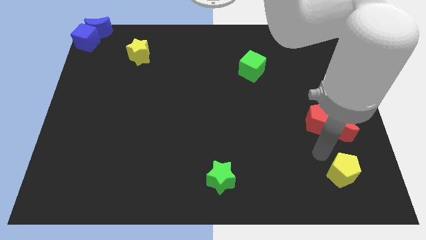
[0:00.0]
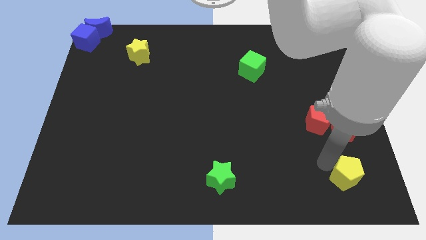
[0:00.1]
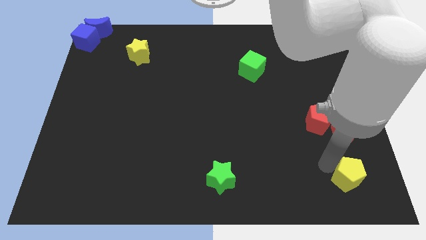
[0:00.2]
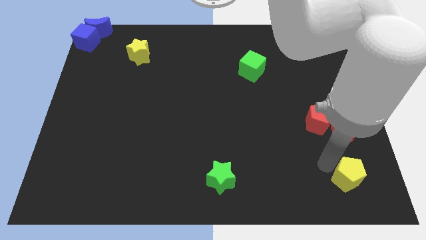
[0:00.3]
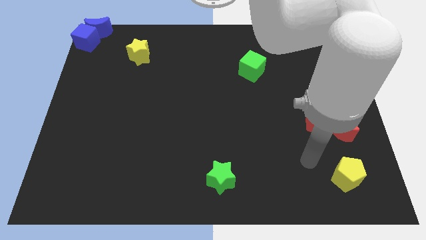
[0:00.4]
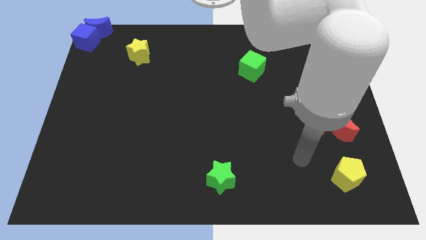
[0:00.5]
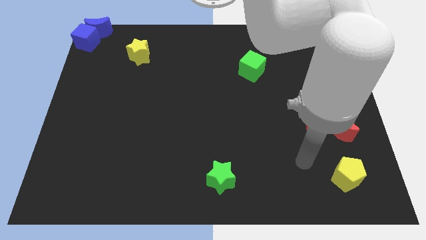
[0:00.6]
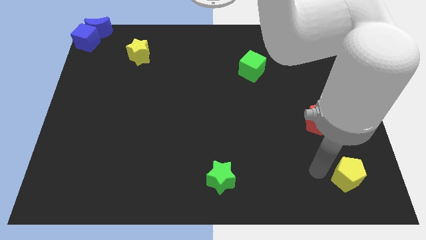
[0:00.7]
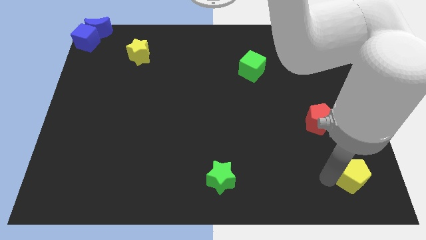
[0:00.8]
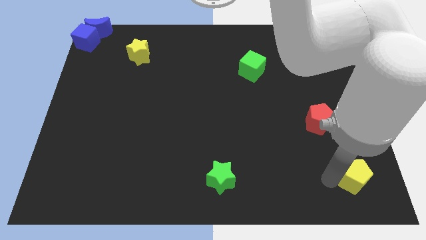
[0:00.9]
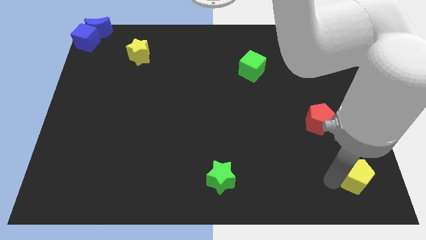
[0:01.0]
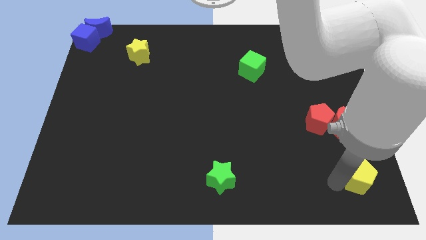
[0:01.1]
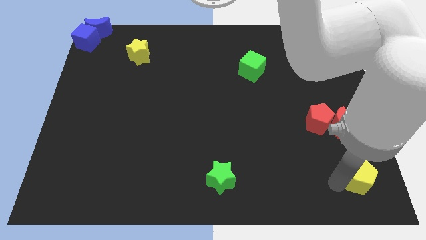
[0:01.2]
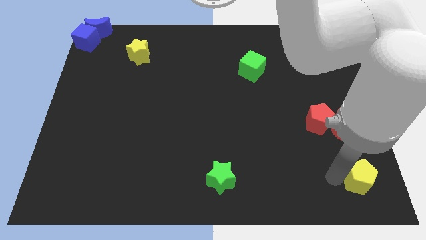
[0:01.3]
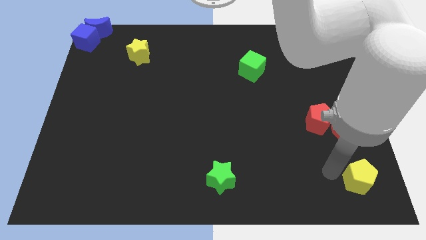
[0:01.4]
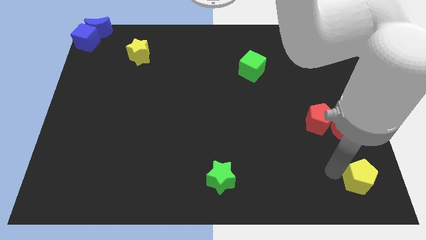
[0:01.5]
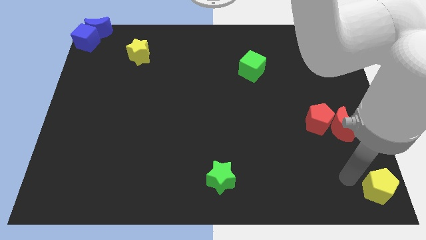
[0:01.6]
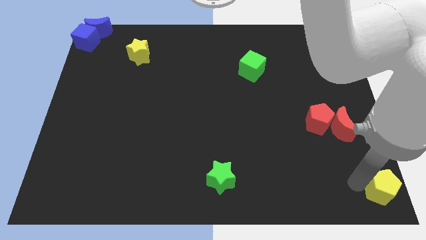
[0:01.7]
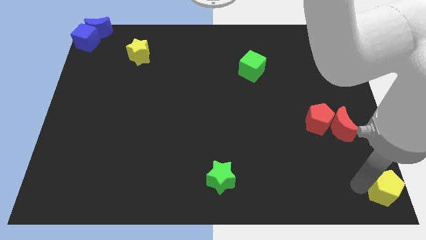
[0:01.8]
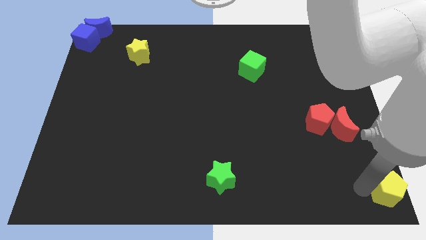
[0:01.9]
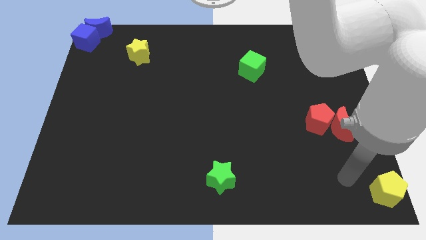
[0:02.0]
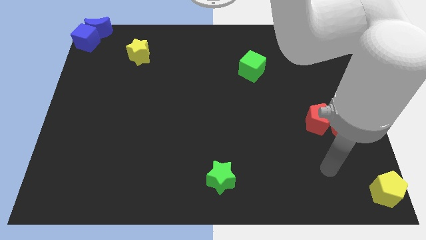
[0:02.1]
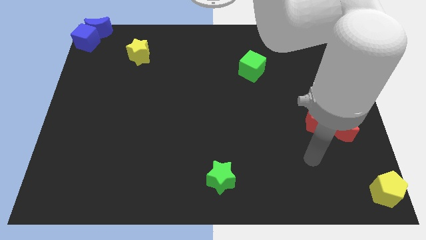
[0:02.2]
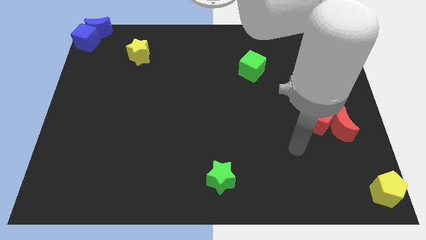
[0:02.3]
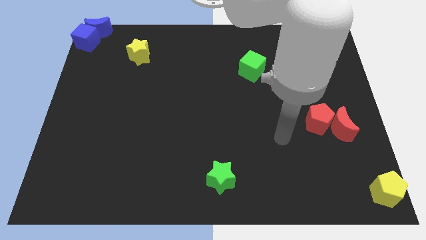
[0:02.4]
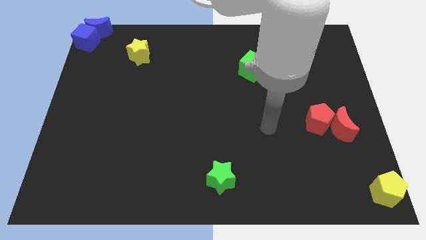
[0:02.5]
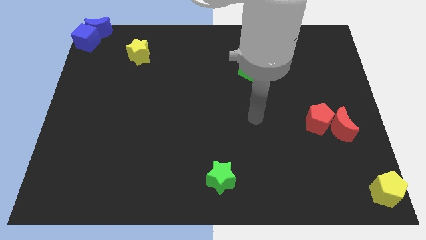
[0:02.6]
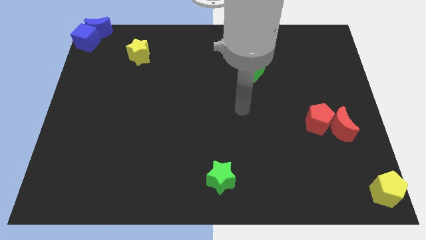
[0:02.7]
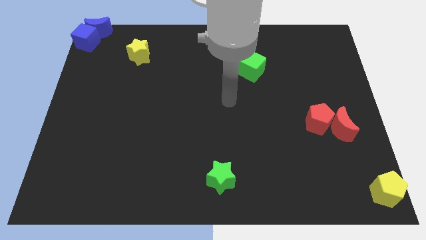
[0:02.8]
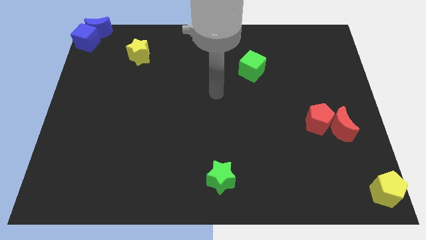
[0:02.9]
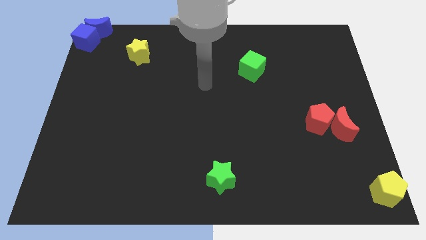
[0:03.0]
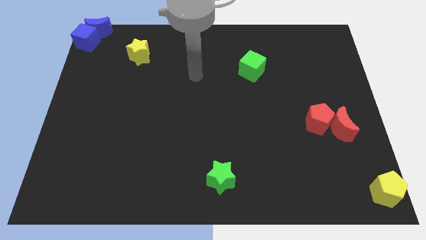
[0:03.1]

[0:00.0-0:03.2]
put the yellow pentagon at the bottom right corner of the board

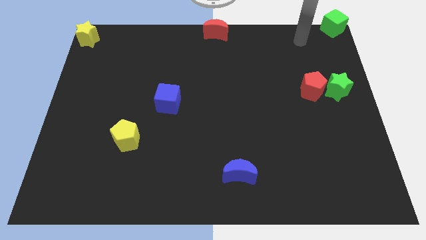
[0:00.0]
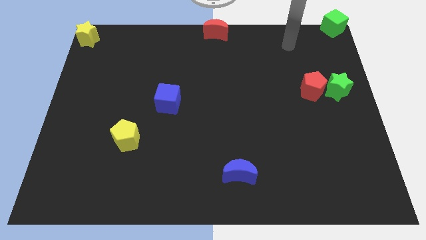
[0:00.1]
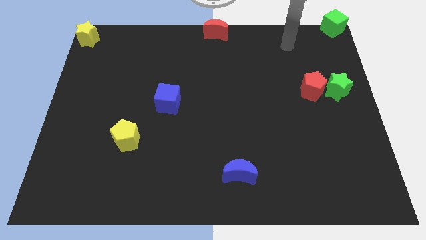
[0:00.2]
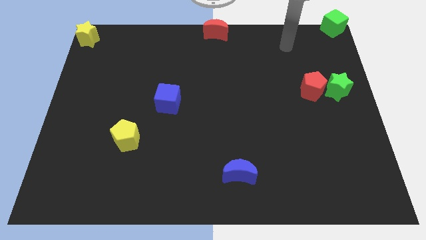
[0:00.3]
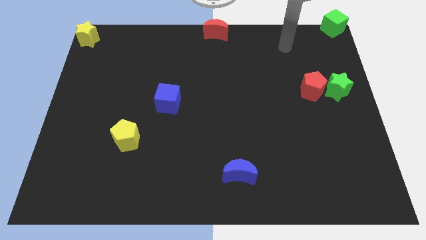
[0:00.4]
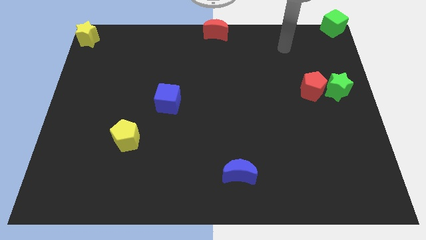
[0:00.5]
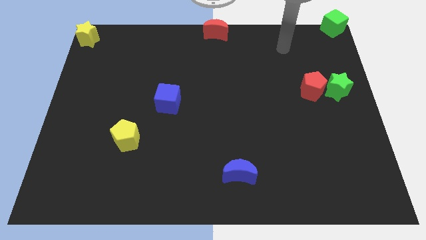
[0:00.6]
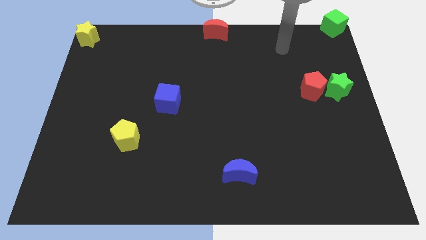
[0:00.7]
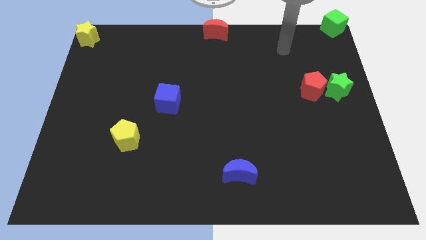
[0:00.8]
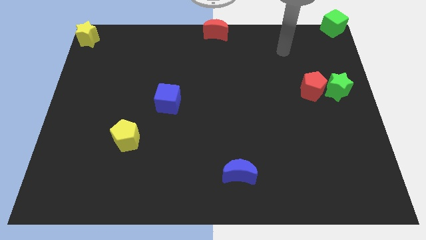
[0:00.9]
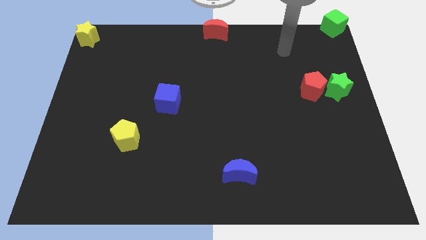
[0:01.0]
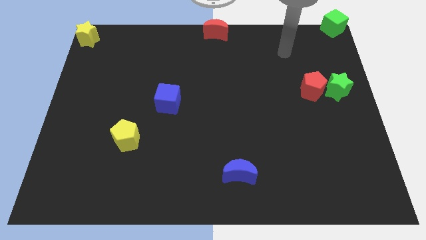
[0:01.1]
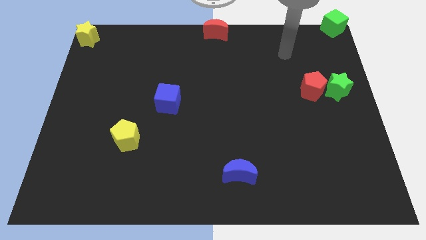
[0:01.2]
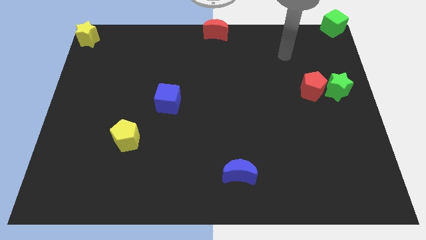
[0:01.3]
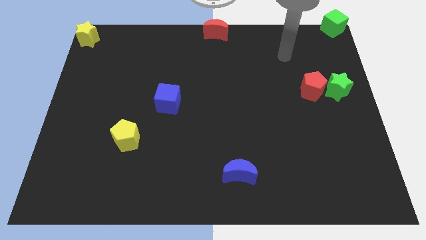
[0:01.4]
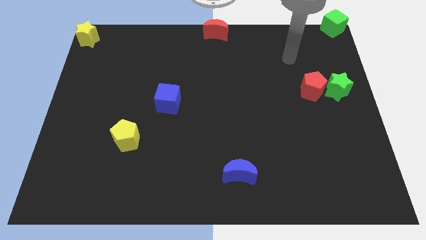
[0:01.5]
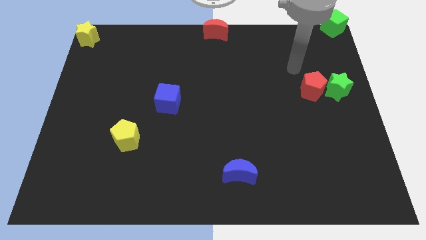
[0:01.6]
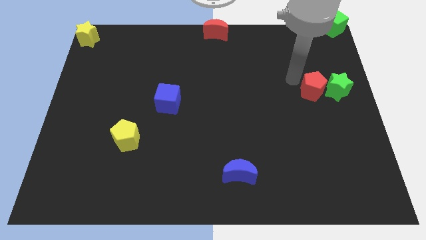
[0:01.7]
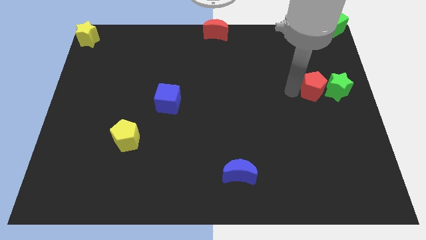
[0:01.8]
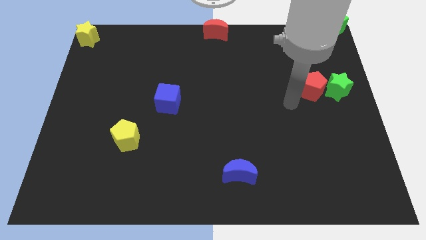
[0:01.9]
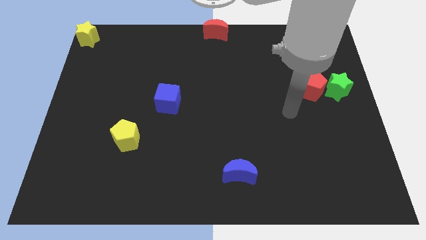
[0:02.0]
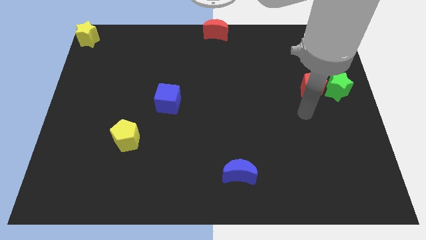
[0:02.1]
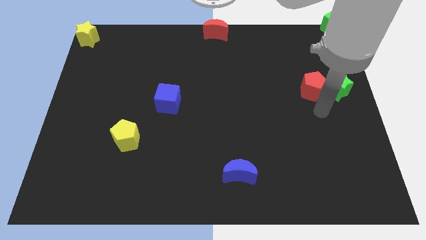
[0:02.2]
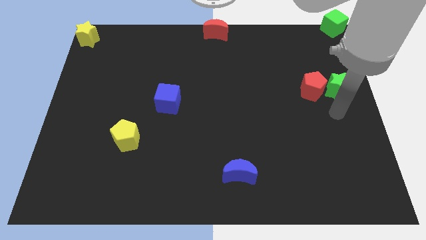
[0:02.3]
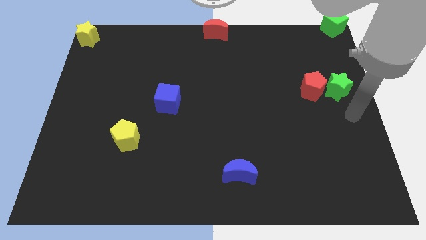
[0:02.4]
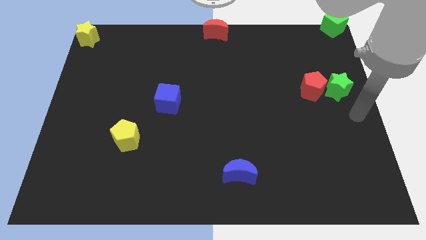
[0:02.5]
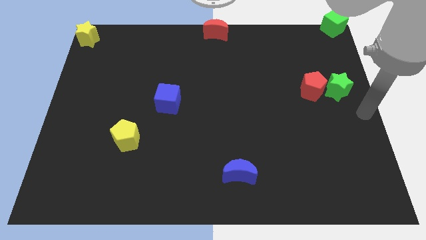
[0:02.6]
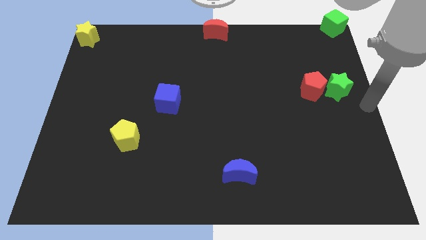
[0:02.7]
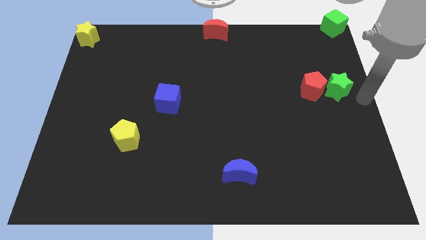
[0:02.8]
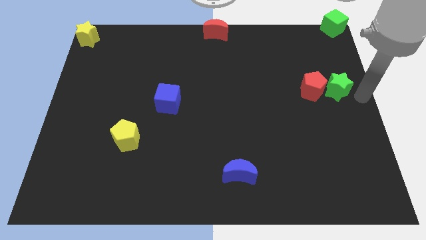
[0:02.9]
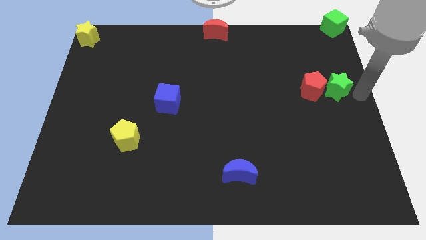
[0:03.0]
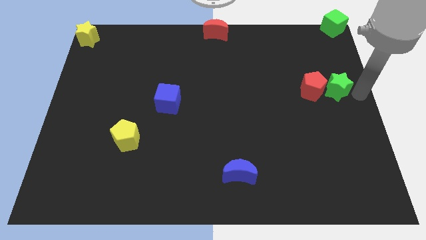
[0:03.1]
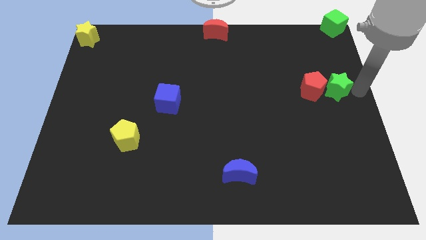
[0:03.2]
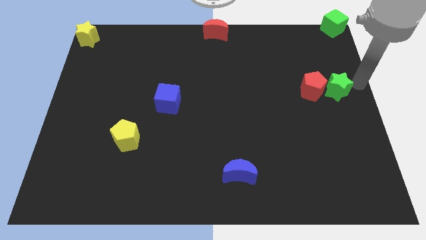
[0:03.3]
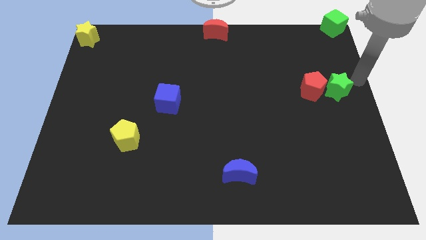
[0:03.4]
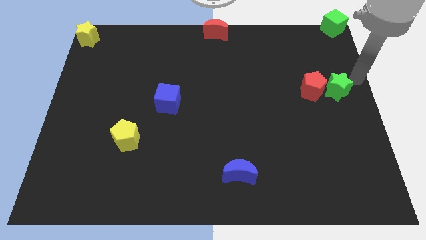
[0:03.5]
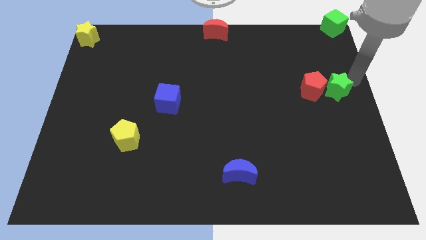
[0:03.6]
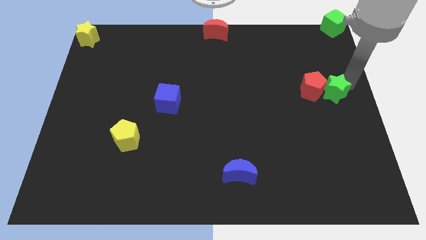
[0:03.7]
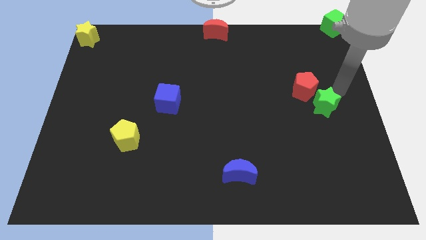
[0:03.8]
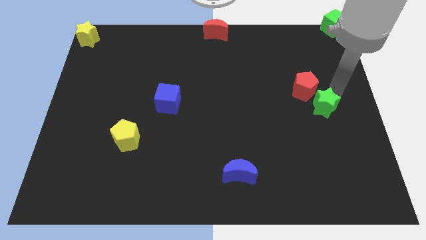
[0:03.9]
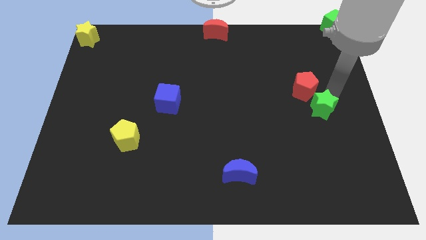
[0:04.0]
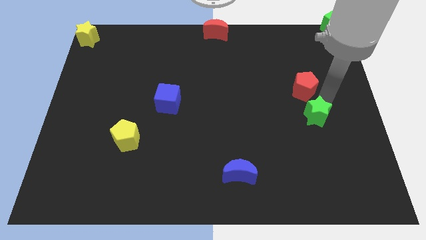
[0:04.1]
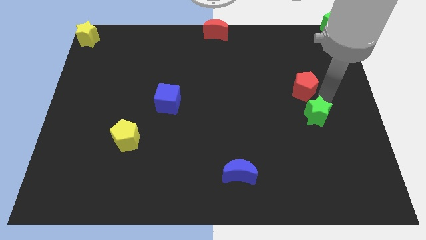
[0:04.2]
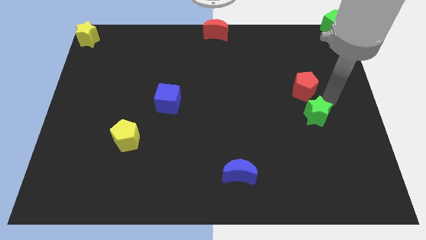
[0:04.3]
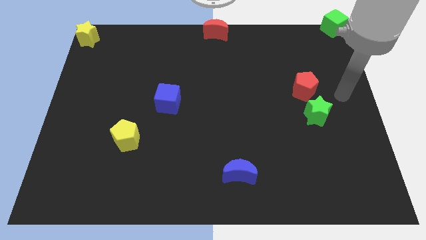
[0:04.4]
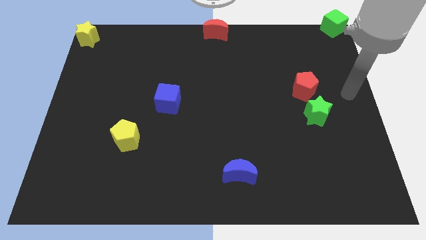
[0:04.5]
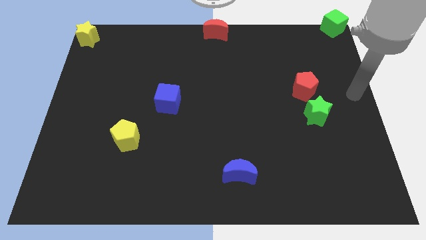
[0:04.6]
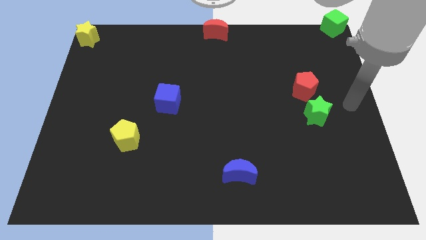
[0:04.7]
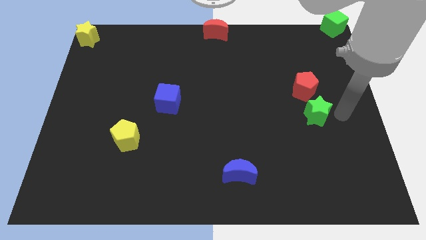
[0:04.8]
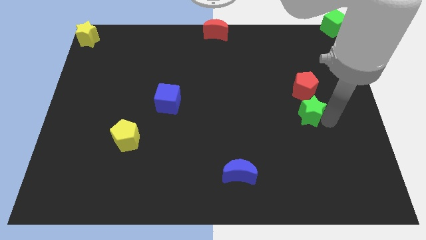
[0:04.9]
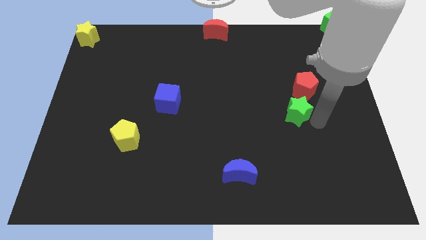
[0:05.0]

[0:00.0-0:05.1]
push the green star below the red pentagon

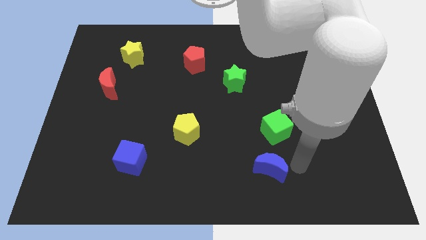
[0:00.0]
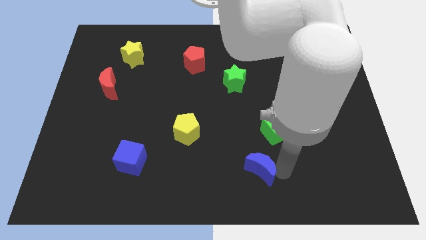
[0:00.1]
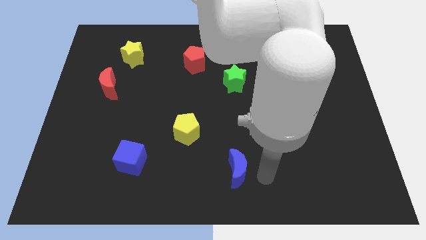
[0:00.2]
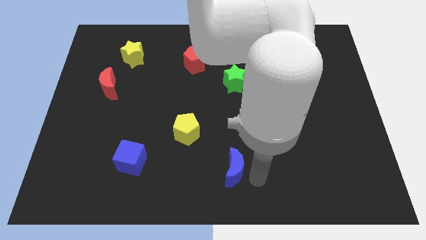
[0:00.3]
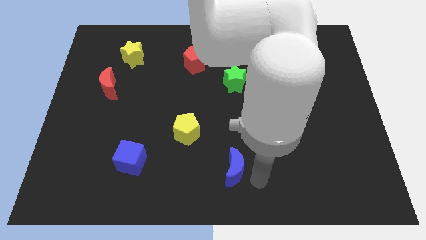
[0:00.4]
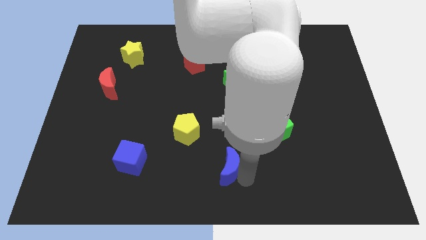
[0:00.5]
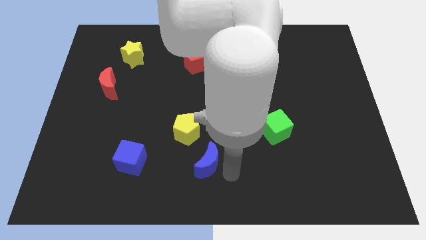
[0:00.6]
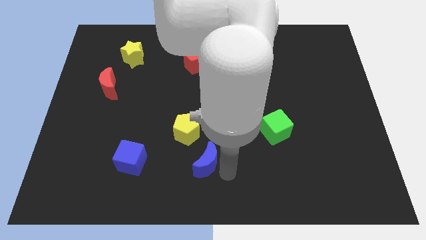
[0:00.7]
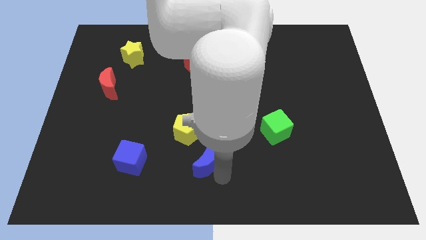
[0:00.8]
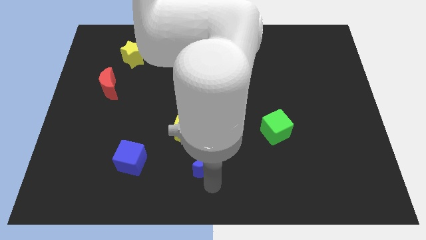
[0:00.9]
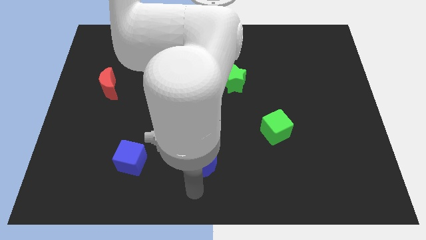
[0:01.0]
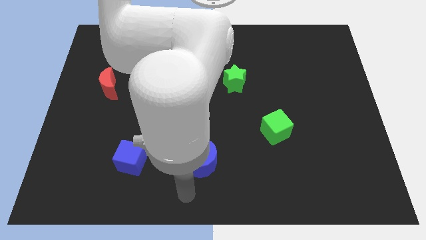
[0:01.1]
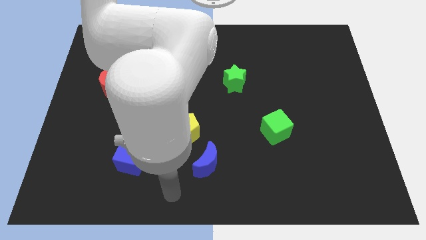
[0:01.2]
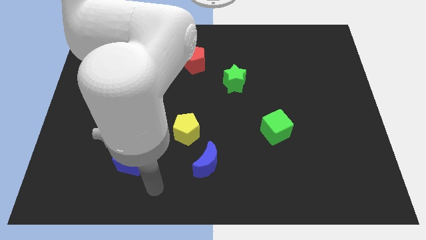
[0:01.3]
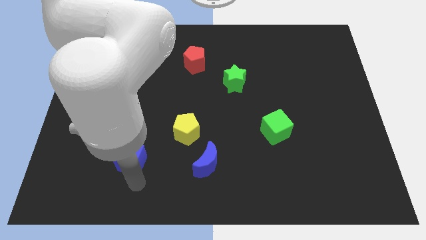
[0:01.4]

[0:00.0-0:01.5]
push blue moon to the bottom right of yellow pentagon
